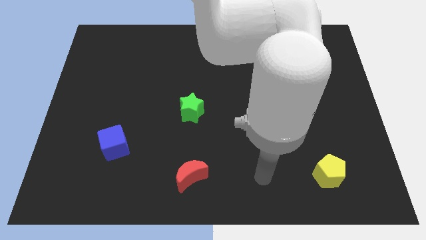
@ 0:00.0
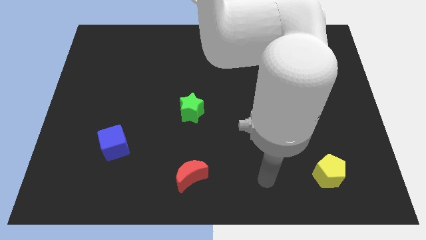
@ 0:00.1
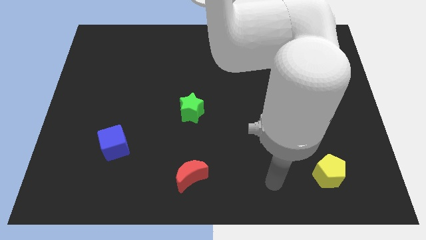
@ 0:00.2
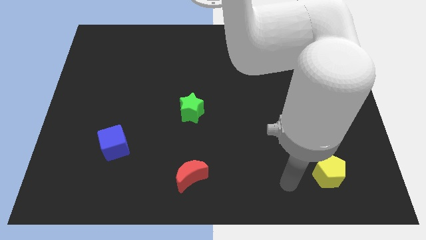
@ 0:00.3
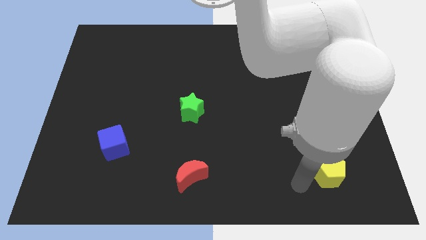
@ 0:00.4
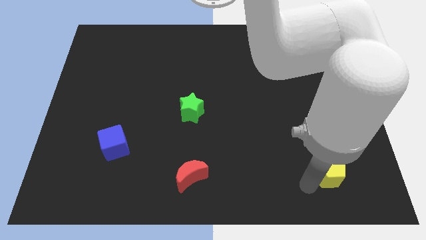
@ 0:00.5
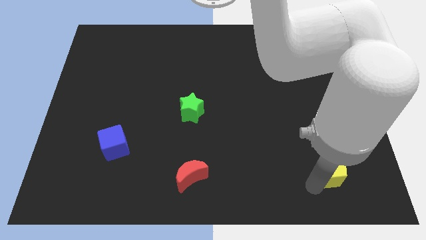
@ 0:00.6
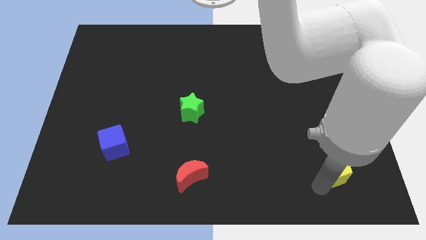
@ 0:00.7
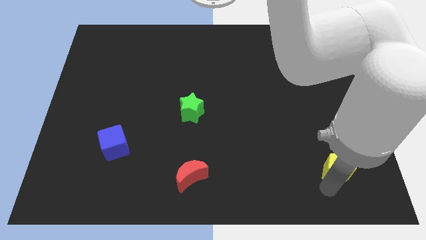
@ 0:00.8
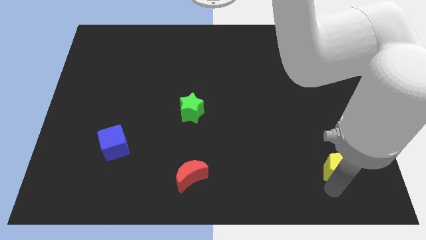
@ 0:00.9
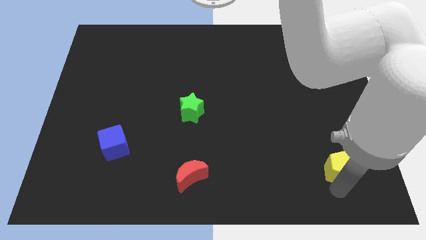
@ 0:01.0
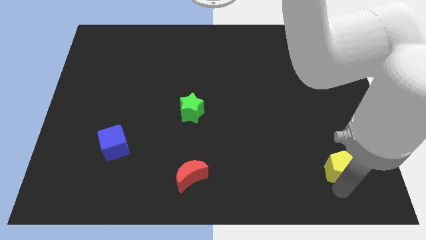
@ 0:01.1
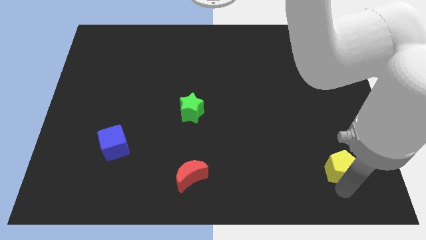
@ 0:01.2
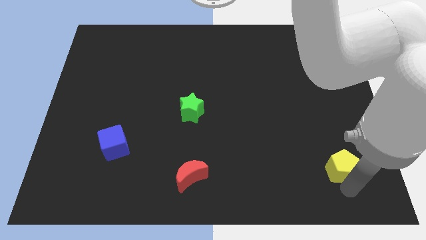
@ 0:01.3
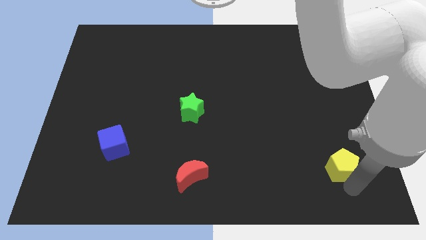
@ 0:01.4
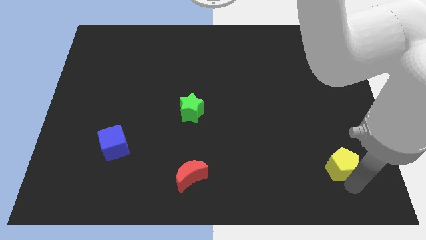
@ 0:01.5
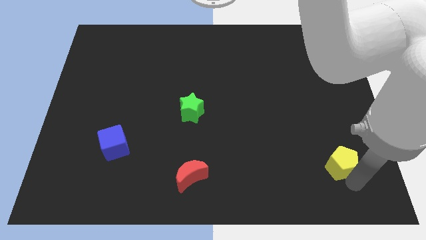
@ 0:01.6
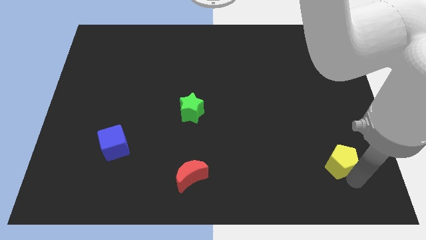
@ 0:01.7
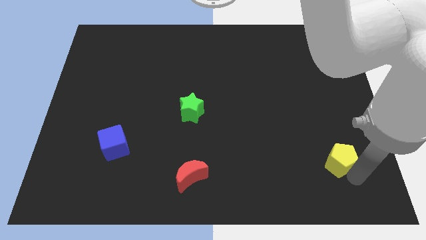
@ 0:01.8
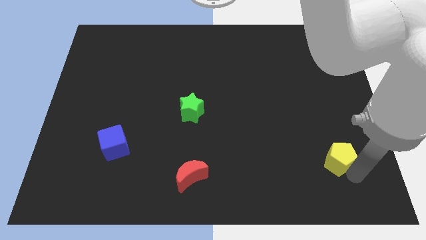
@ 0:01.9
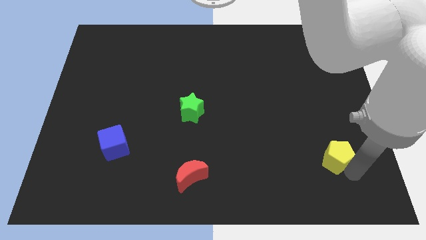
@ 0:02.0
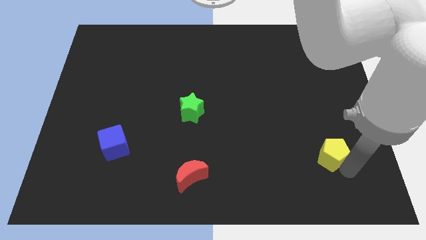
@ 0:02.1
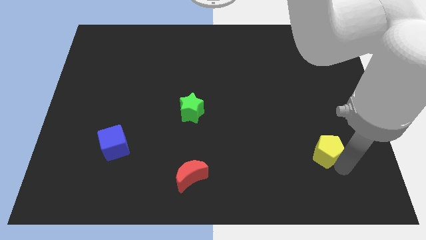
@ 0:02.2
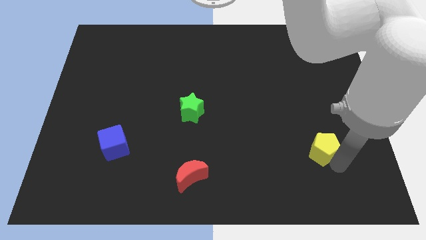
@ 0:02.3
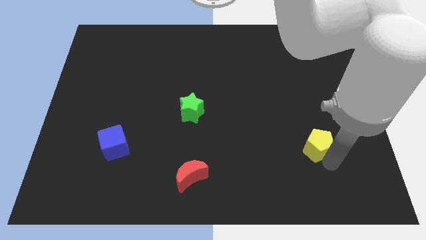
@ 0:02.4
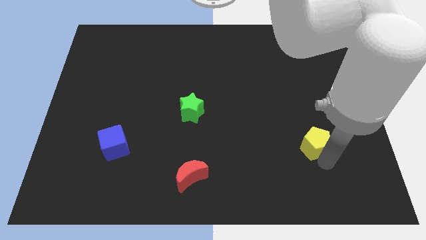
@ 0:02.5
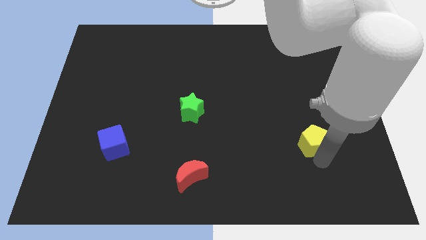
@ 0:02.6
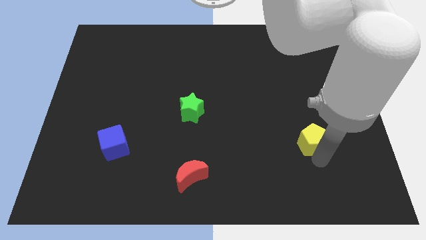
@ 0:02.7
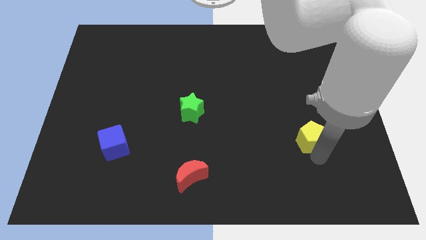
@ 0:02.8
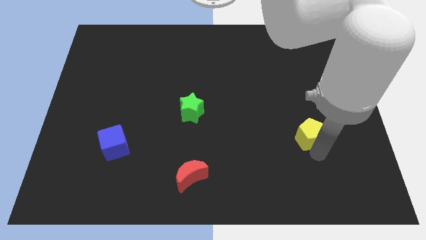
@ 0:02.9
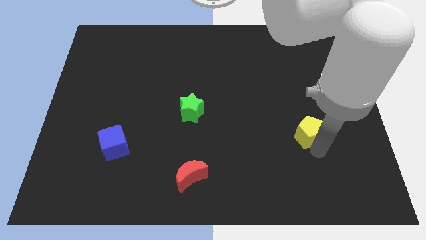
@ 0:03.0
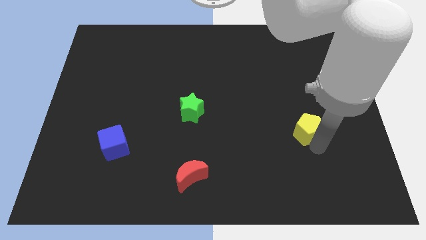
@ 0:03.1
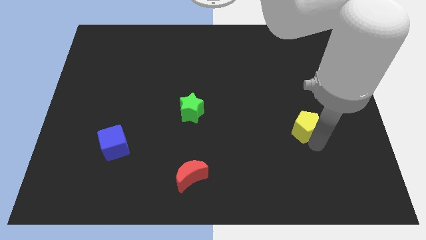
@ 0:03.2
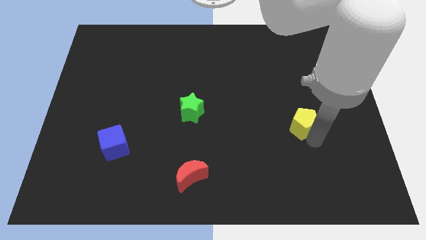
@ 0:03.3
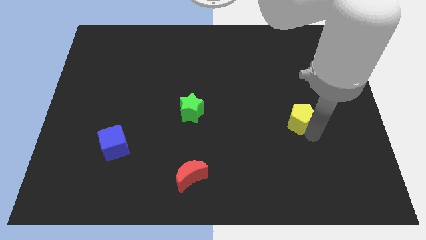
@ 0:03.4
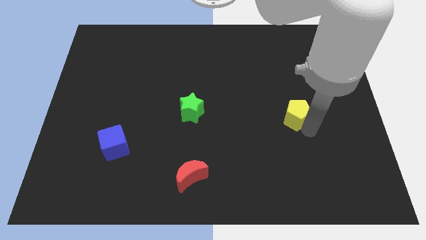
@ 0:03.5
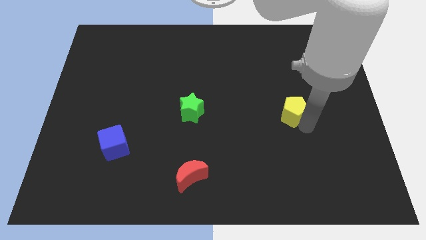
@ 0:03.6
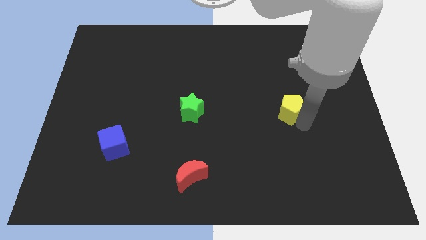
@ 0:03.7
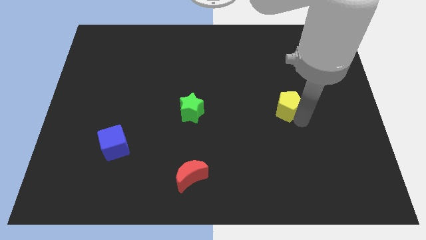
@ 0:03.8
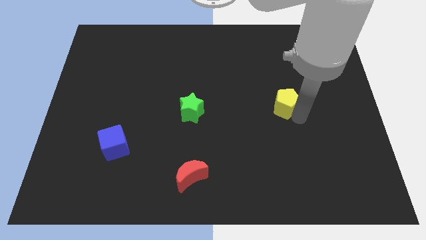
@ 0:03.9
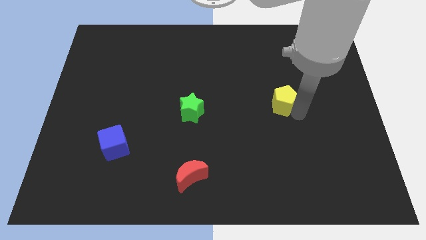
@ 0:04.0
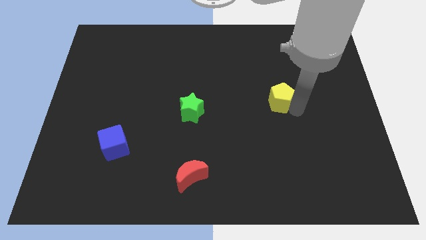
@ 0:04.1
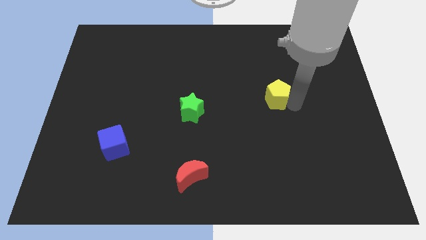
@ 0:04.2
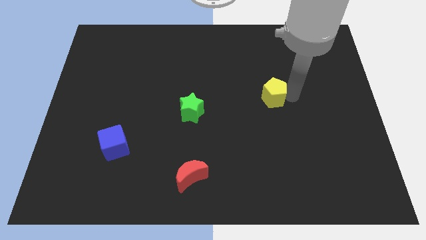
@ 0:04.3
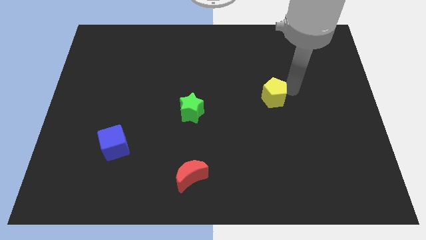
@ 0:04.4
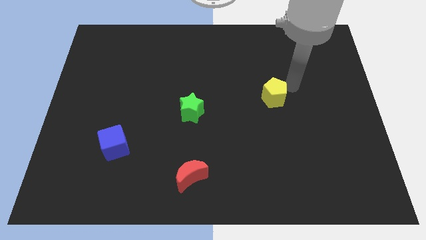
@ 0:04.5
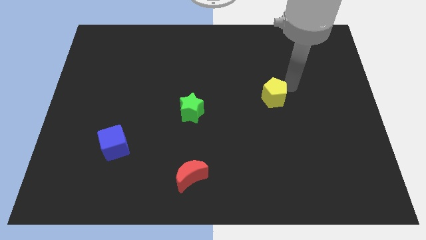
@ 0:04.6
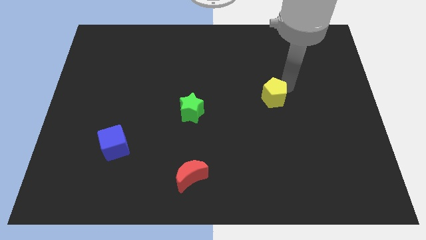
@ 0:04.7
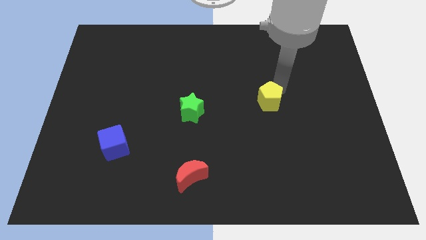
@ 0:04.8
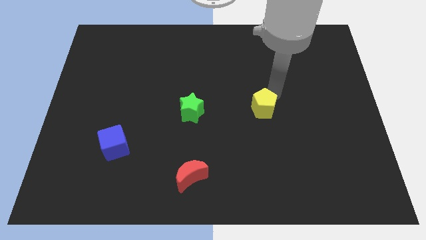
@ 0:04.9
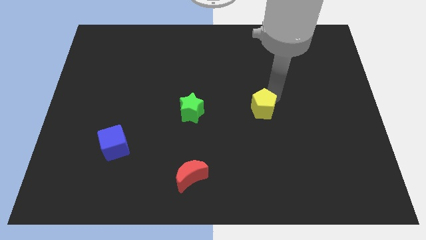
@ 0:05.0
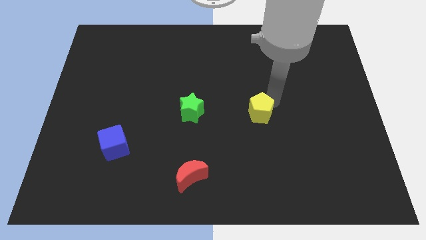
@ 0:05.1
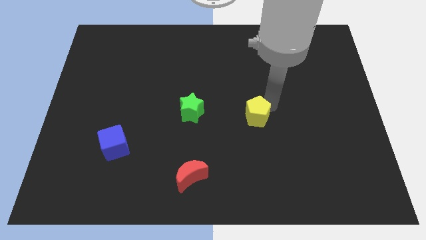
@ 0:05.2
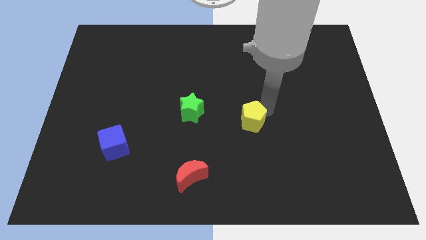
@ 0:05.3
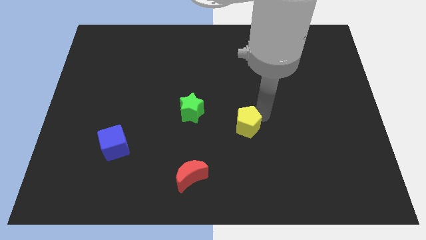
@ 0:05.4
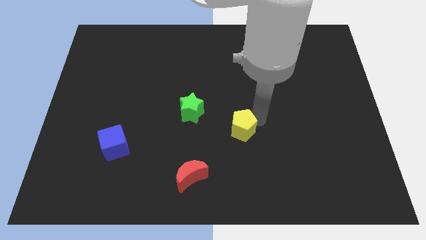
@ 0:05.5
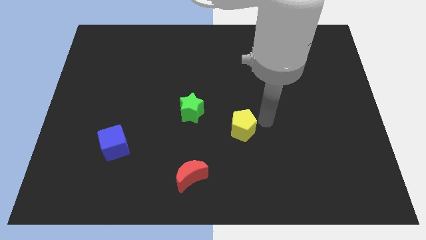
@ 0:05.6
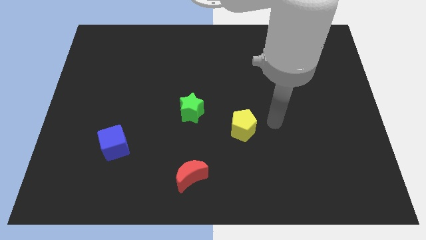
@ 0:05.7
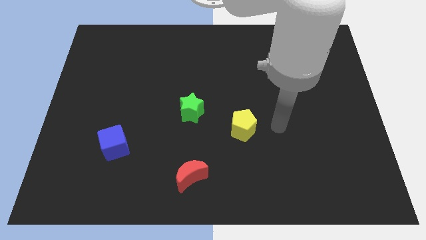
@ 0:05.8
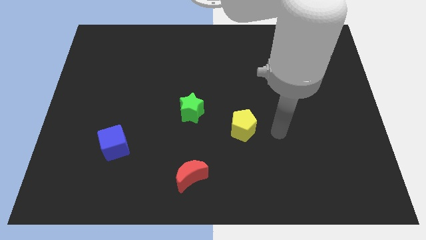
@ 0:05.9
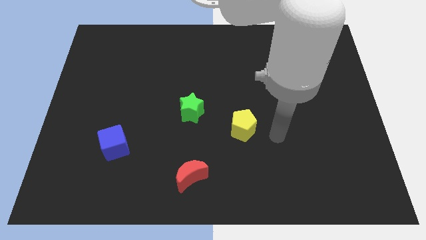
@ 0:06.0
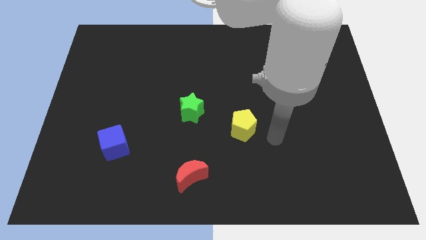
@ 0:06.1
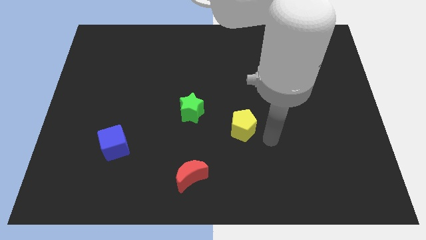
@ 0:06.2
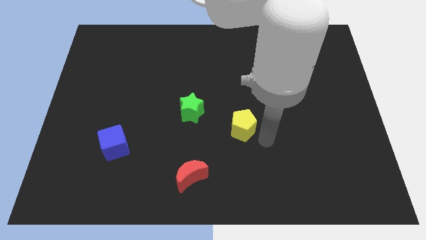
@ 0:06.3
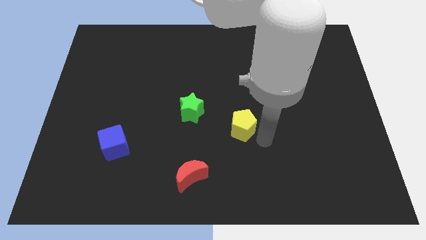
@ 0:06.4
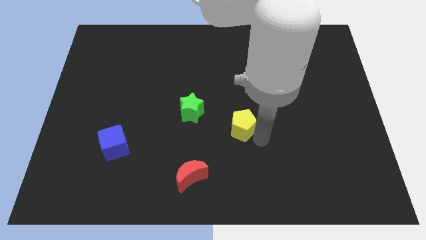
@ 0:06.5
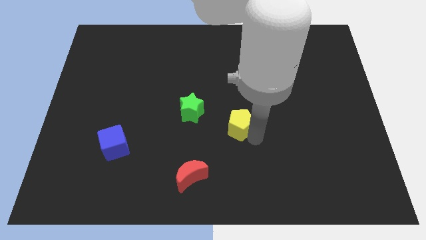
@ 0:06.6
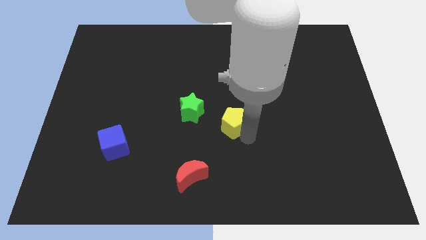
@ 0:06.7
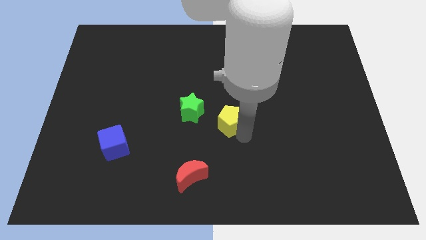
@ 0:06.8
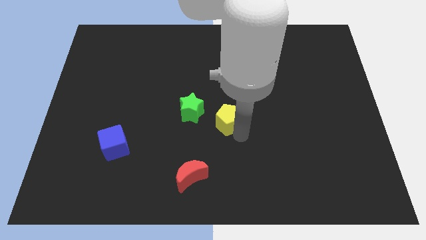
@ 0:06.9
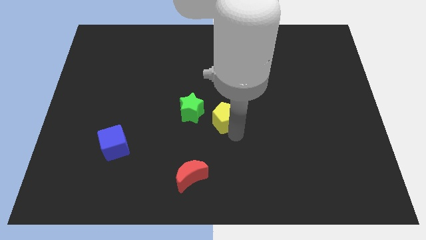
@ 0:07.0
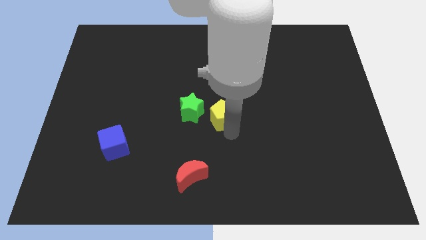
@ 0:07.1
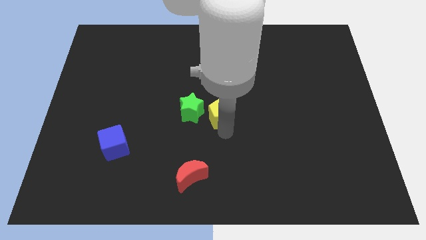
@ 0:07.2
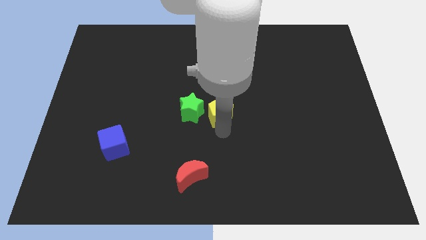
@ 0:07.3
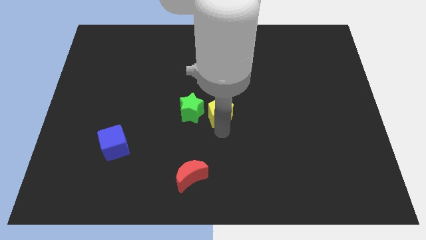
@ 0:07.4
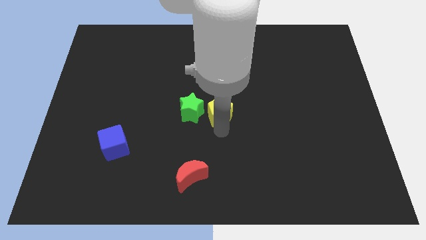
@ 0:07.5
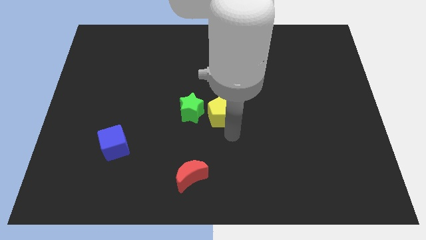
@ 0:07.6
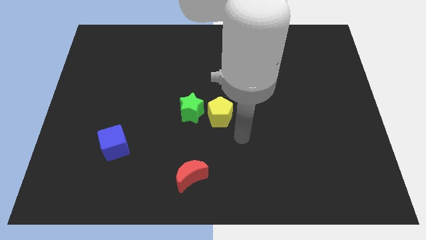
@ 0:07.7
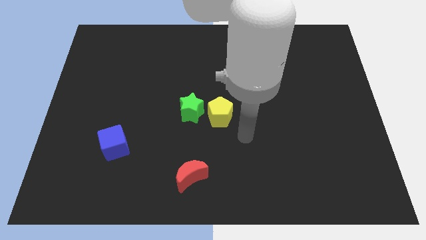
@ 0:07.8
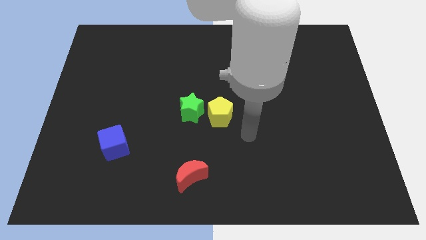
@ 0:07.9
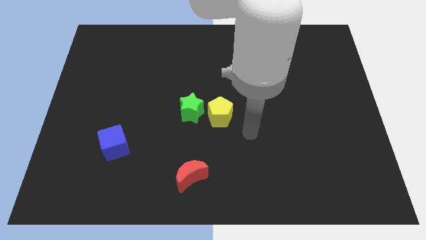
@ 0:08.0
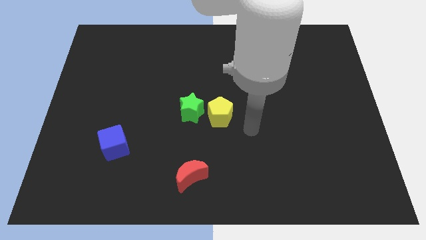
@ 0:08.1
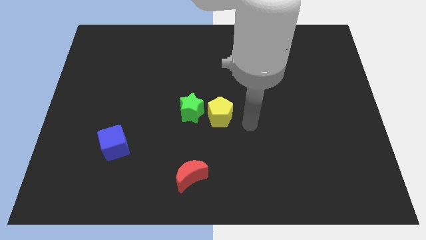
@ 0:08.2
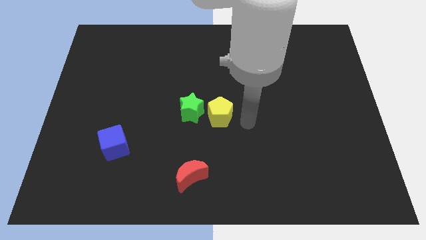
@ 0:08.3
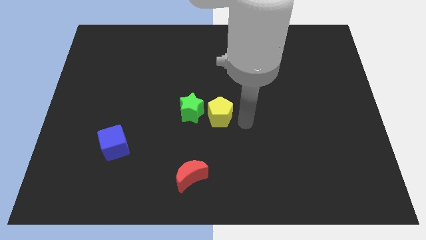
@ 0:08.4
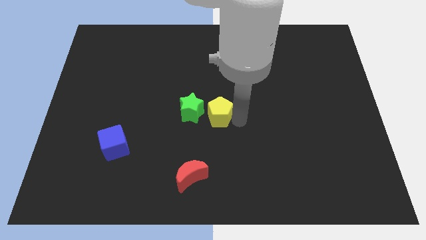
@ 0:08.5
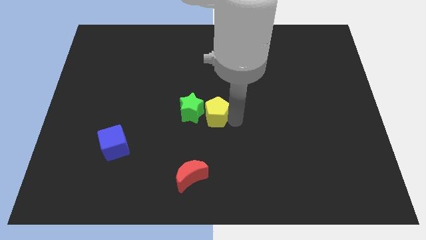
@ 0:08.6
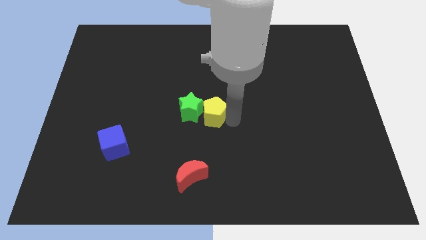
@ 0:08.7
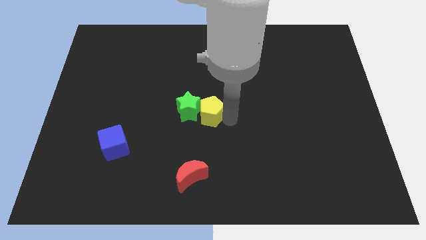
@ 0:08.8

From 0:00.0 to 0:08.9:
push the yellow block next to the green star

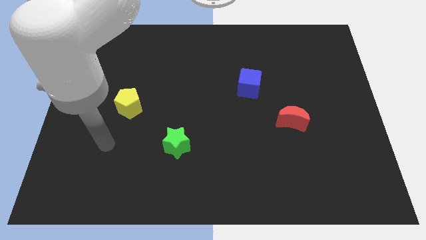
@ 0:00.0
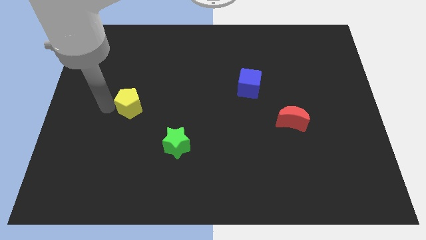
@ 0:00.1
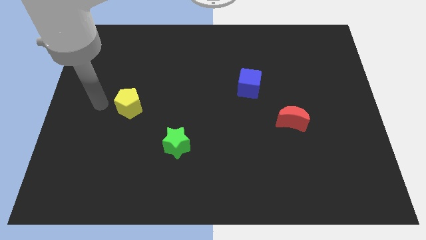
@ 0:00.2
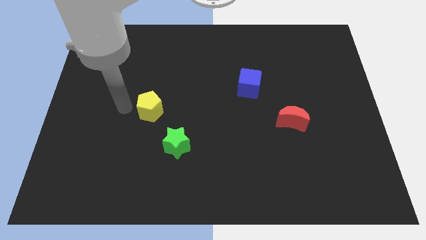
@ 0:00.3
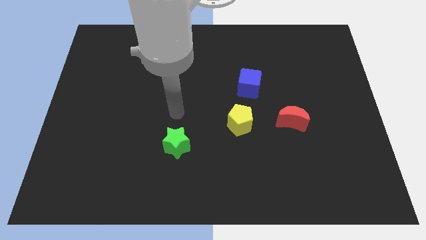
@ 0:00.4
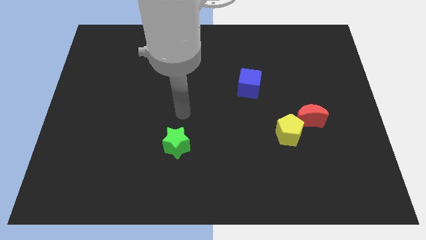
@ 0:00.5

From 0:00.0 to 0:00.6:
move the pentagon towards the red block
